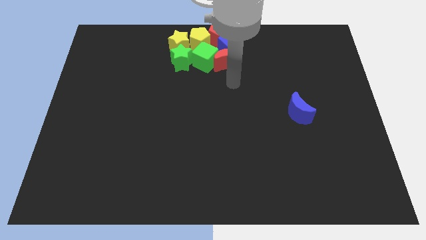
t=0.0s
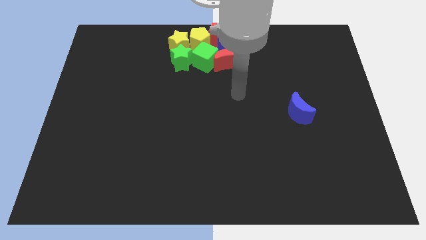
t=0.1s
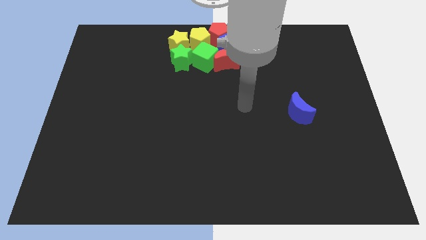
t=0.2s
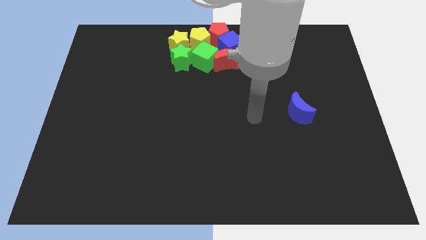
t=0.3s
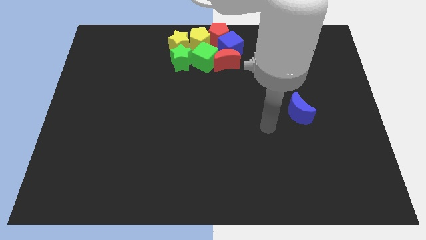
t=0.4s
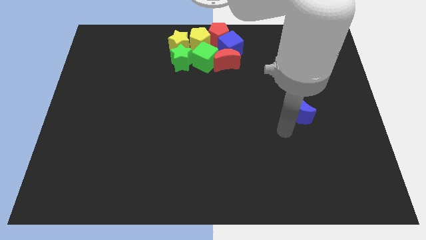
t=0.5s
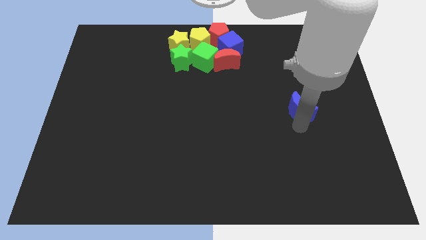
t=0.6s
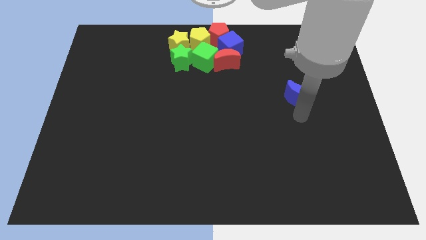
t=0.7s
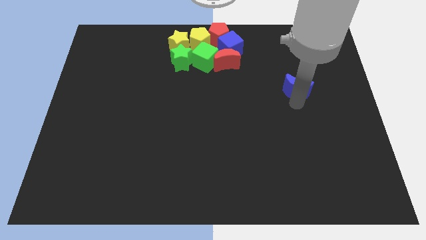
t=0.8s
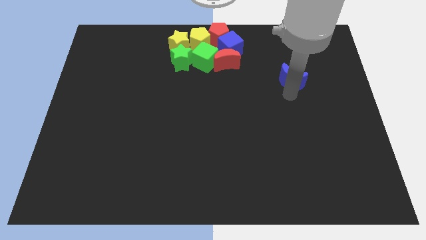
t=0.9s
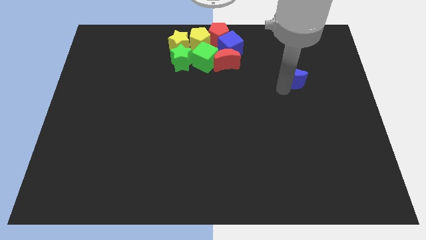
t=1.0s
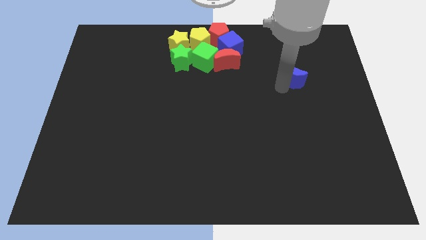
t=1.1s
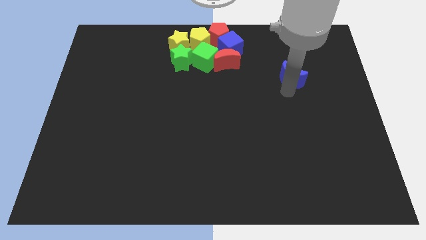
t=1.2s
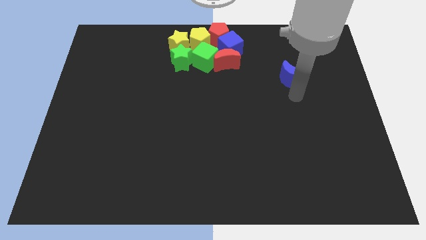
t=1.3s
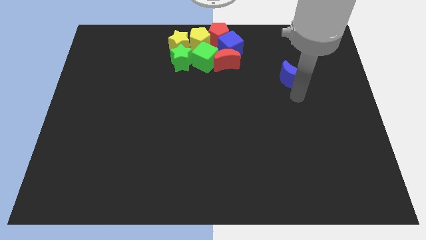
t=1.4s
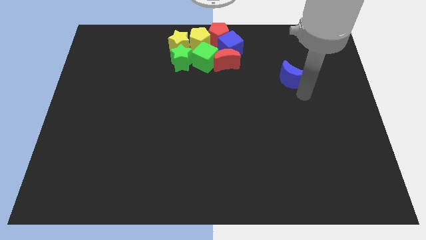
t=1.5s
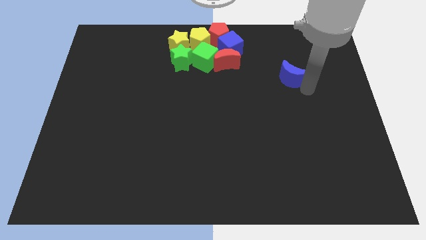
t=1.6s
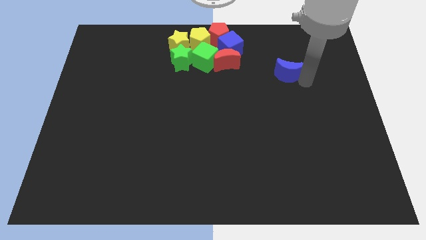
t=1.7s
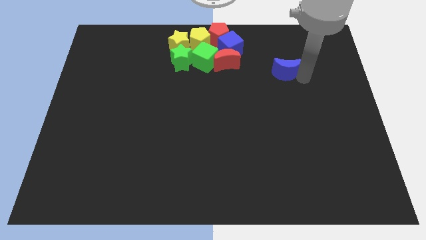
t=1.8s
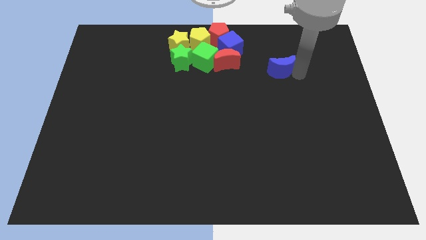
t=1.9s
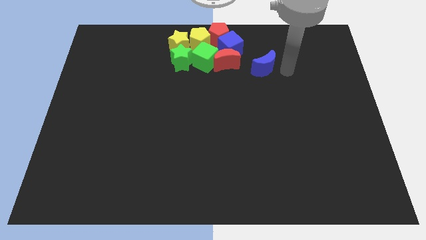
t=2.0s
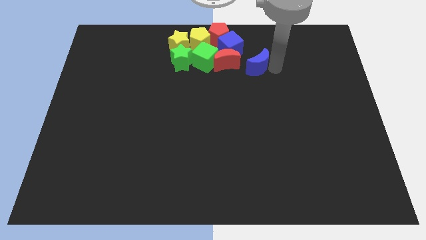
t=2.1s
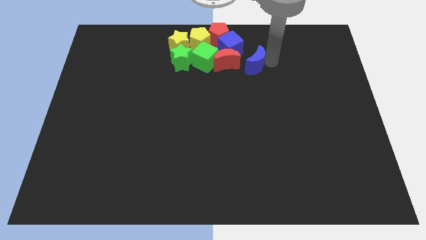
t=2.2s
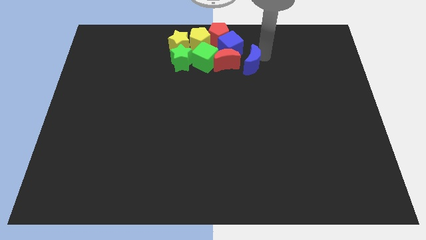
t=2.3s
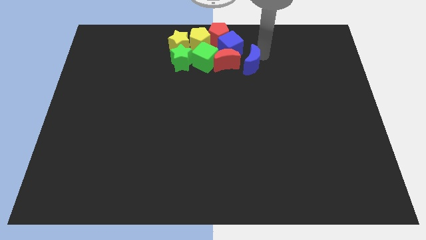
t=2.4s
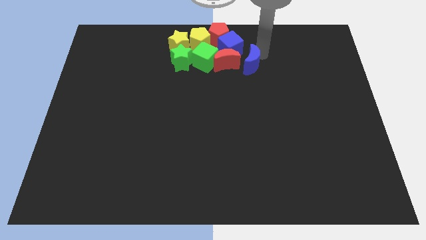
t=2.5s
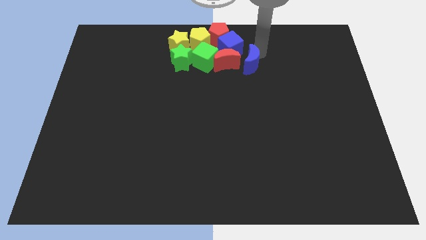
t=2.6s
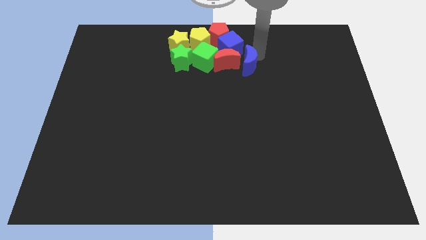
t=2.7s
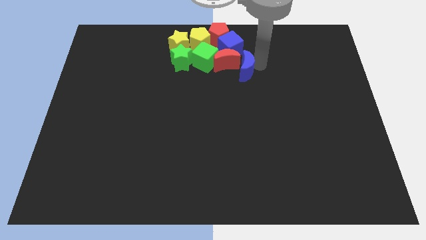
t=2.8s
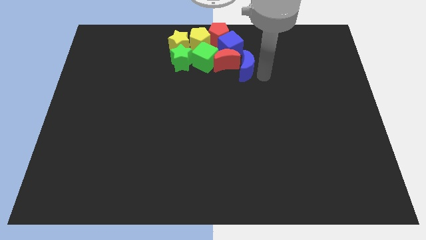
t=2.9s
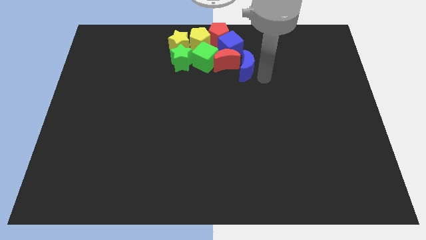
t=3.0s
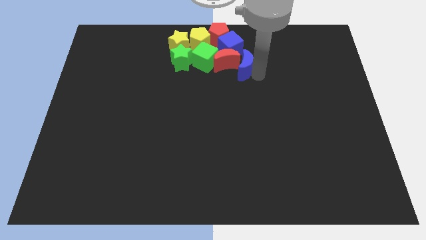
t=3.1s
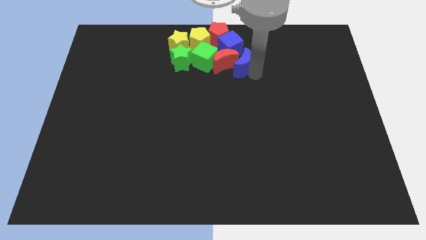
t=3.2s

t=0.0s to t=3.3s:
place the blue moon to the right of the red crescent

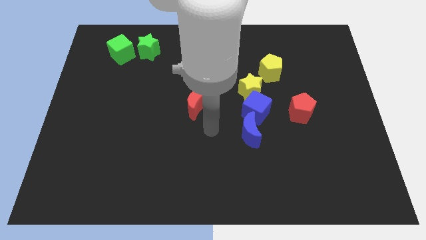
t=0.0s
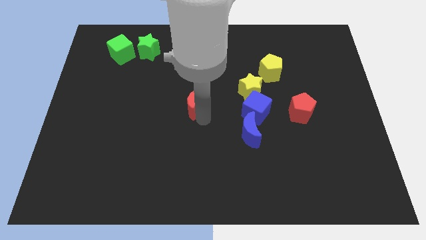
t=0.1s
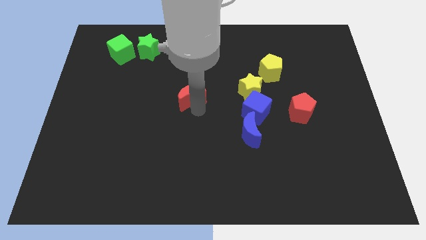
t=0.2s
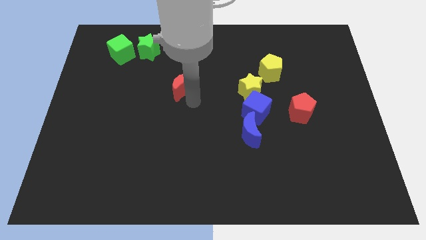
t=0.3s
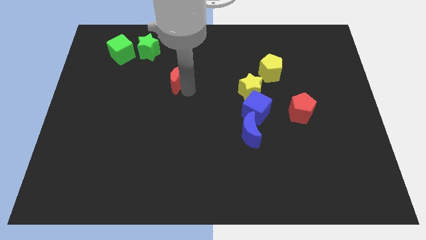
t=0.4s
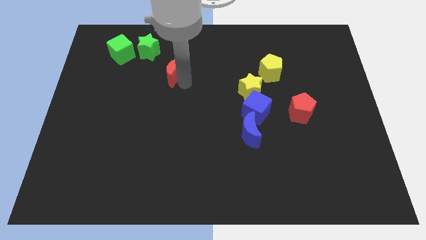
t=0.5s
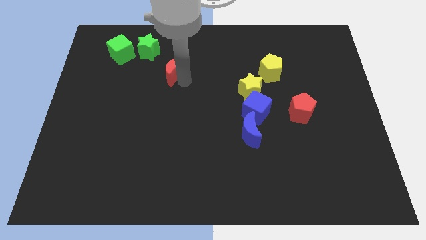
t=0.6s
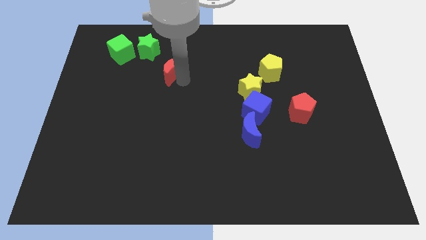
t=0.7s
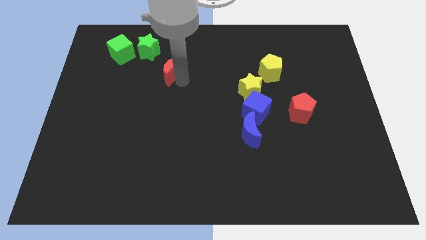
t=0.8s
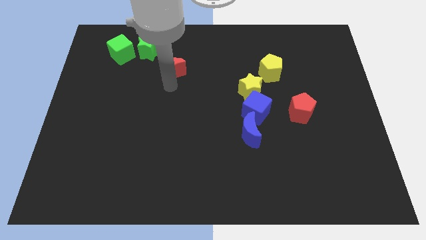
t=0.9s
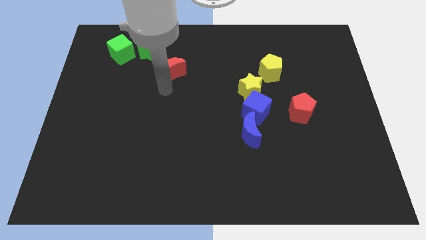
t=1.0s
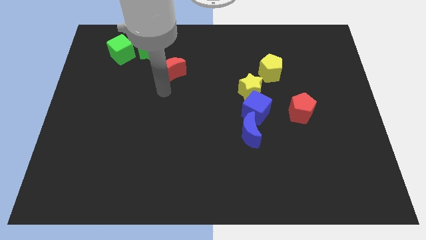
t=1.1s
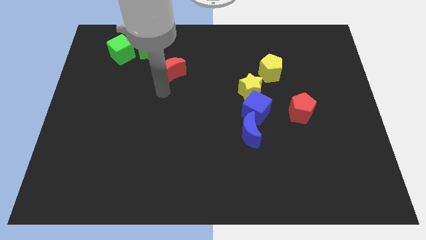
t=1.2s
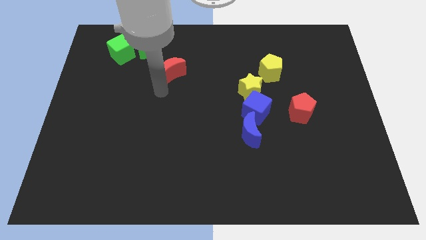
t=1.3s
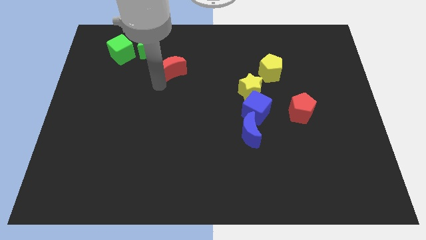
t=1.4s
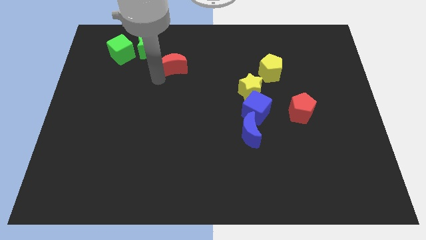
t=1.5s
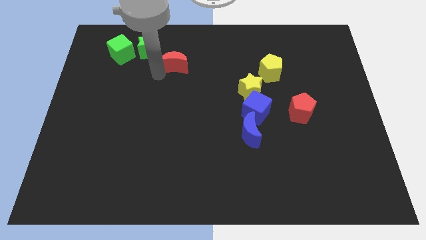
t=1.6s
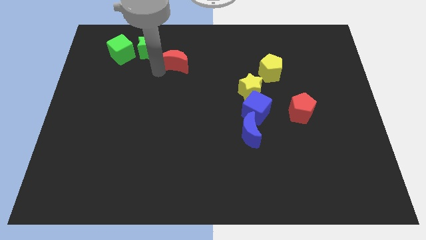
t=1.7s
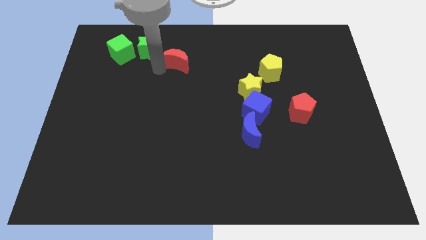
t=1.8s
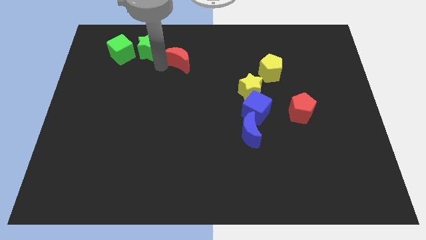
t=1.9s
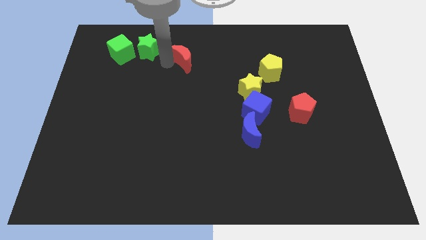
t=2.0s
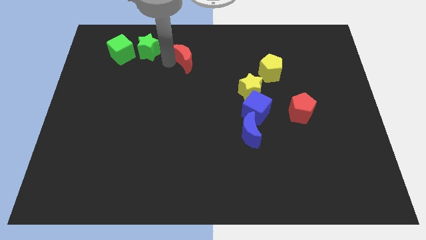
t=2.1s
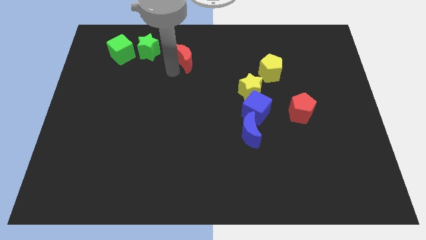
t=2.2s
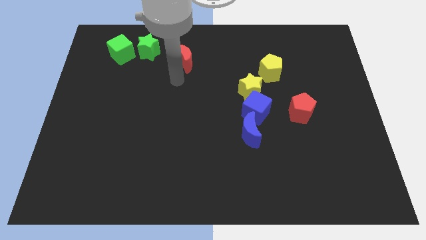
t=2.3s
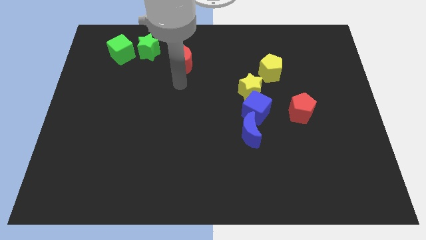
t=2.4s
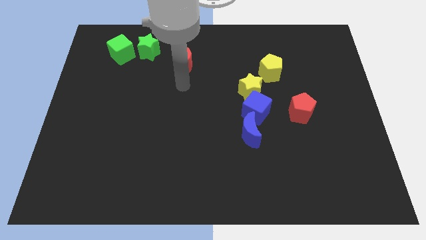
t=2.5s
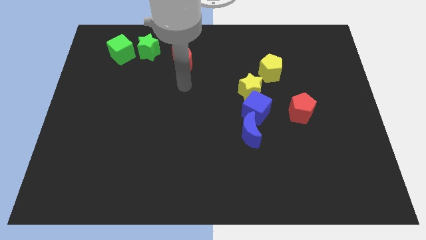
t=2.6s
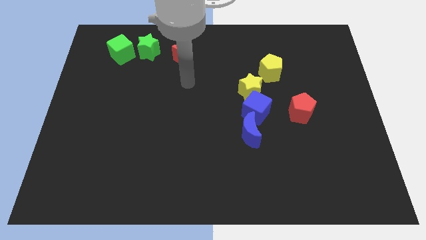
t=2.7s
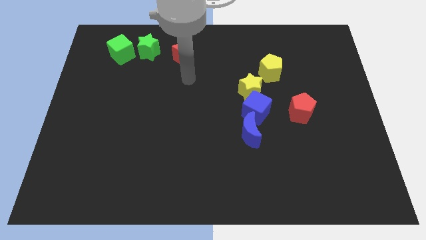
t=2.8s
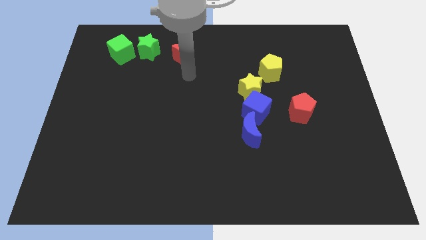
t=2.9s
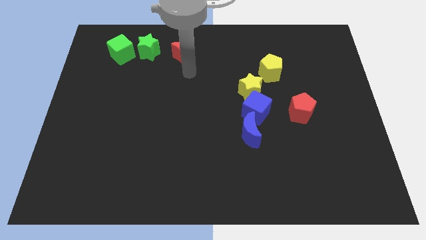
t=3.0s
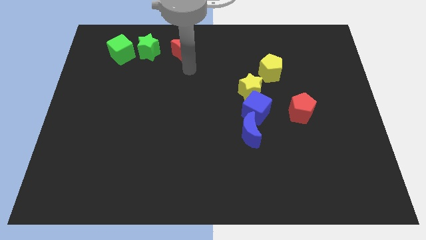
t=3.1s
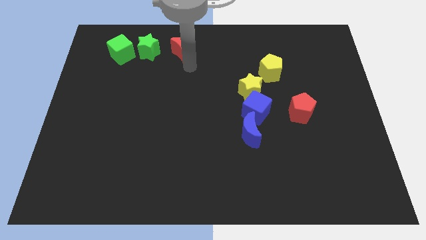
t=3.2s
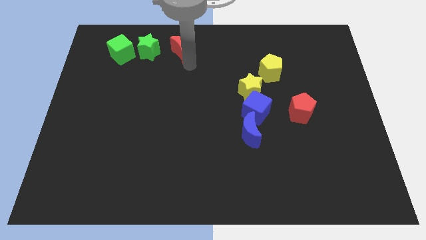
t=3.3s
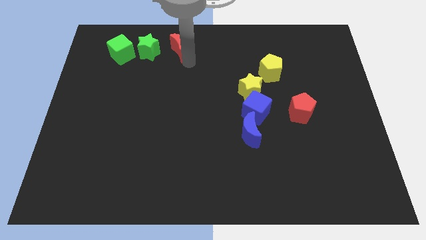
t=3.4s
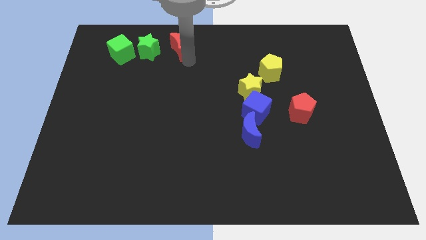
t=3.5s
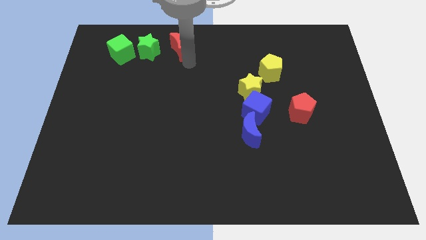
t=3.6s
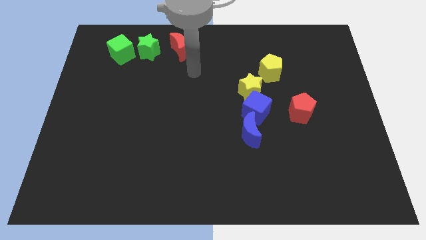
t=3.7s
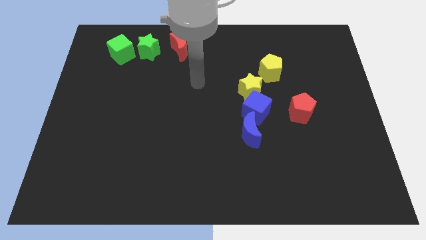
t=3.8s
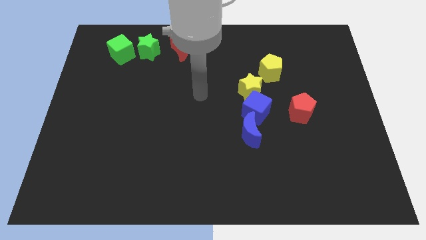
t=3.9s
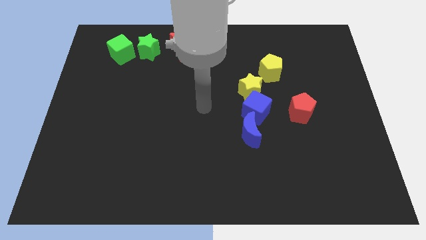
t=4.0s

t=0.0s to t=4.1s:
place the red moon right to the green star

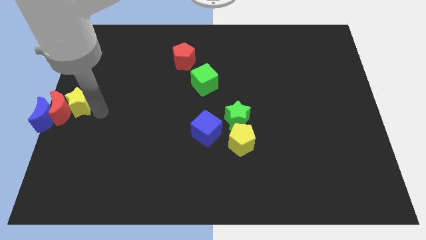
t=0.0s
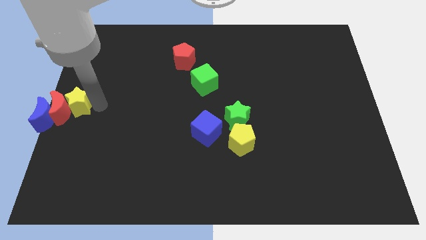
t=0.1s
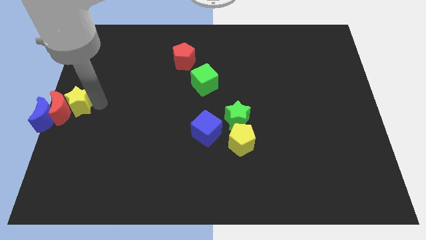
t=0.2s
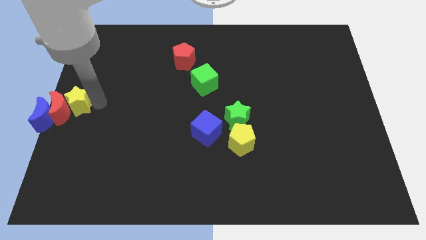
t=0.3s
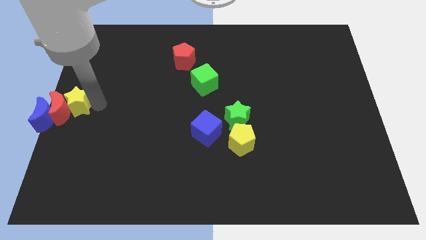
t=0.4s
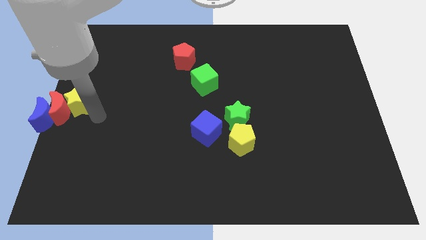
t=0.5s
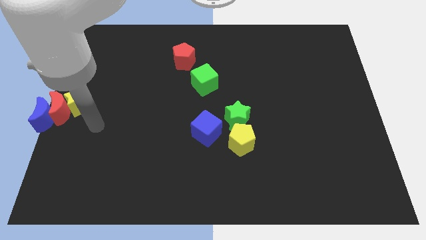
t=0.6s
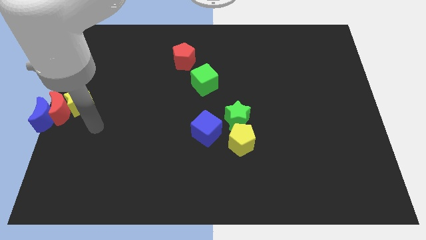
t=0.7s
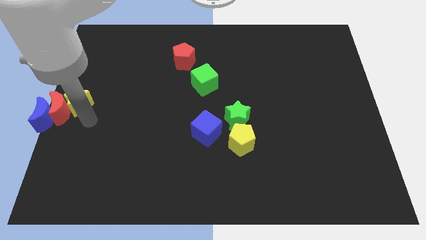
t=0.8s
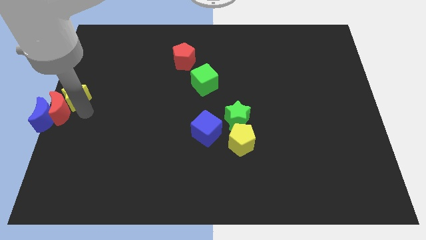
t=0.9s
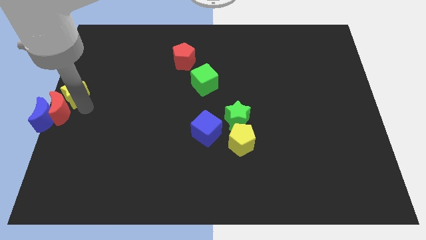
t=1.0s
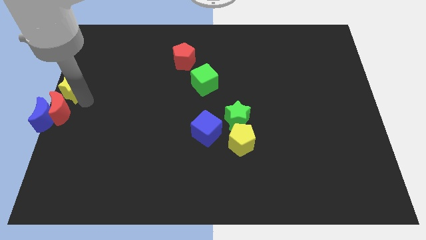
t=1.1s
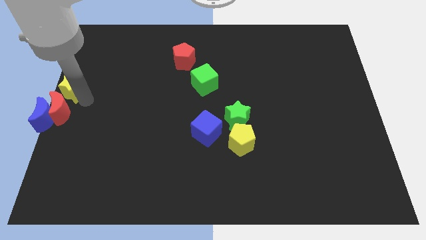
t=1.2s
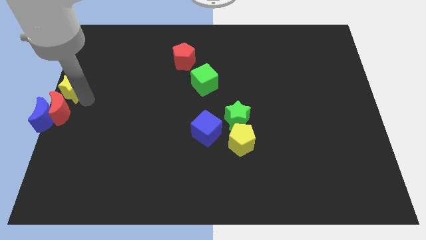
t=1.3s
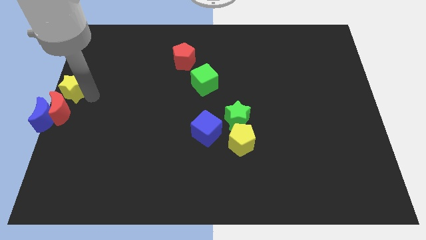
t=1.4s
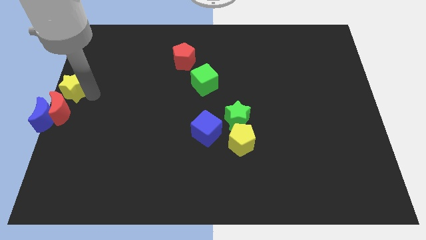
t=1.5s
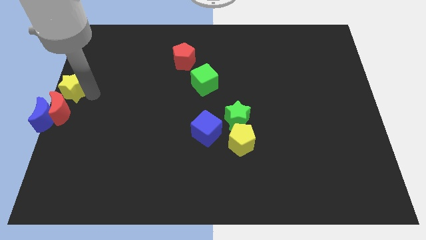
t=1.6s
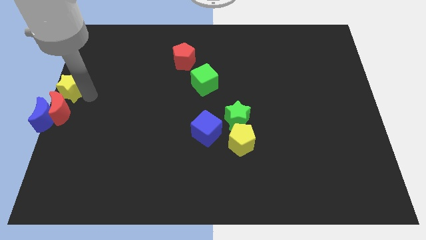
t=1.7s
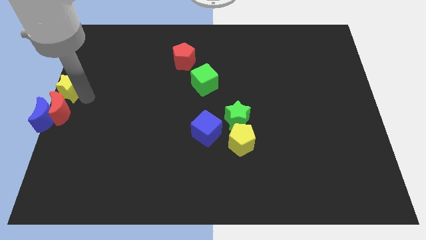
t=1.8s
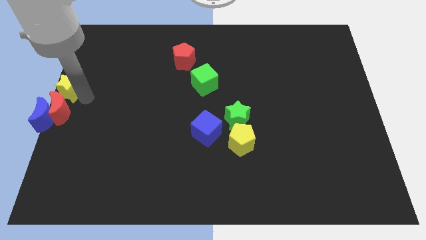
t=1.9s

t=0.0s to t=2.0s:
place the yellow star on the top of red crescent
